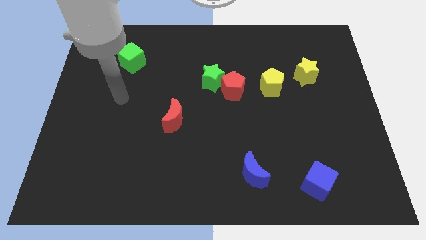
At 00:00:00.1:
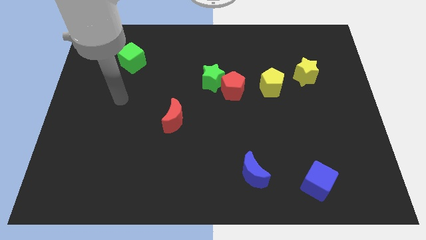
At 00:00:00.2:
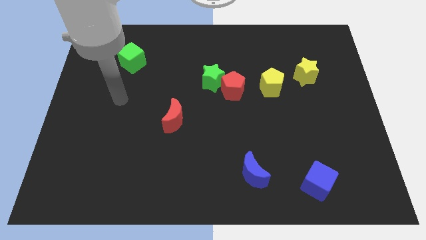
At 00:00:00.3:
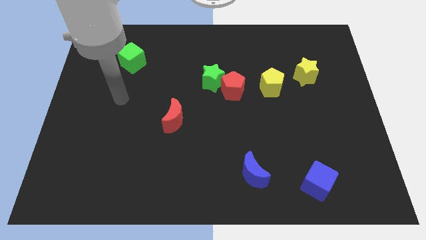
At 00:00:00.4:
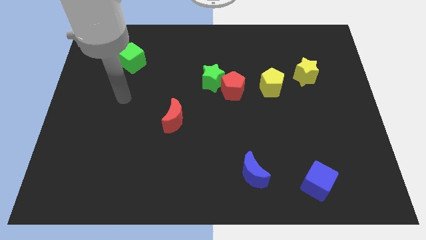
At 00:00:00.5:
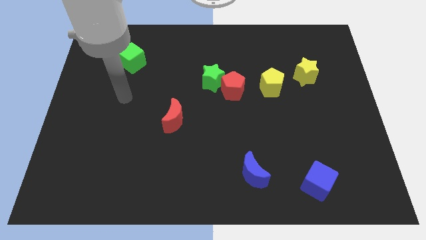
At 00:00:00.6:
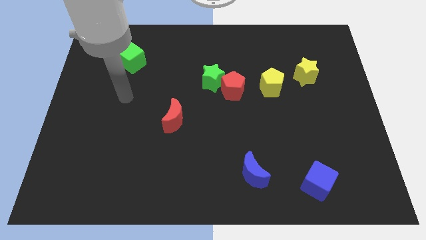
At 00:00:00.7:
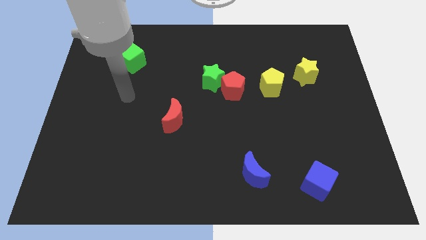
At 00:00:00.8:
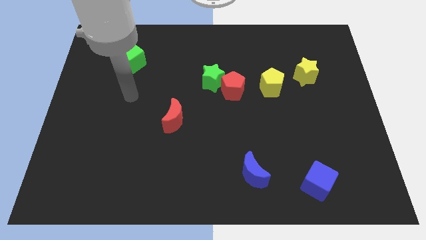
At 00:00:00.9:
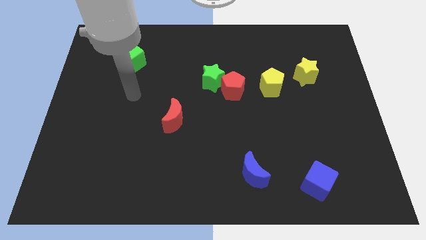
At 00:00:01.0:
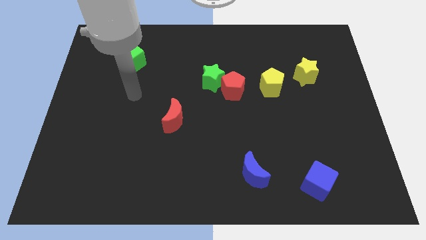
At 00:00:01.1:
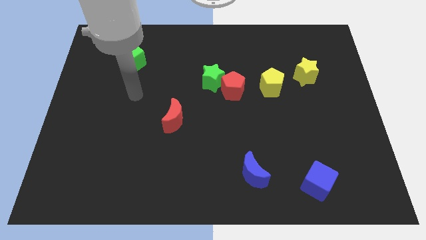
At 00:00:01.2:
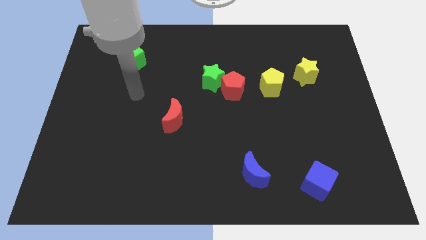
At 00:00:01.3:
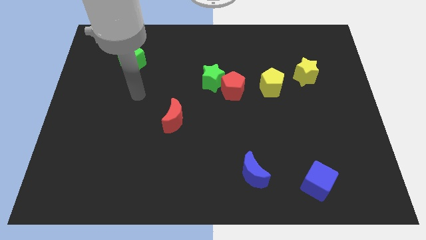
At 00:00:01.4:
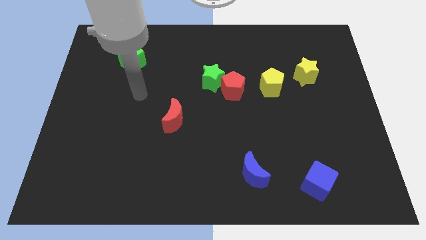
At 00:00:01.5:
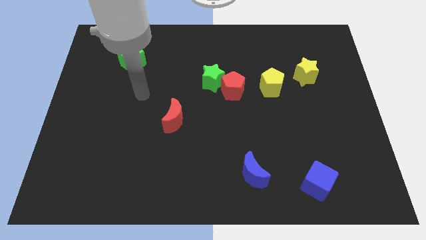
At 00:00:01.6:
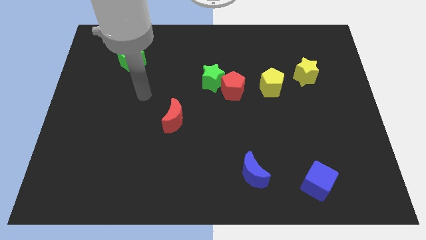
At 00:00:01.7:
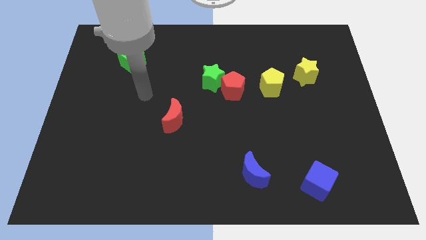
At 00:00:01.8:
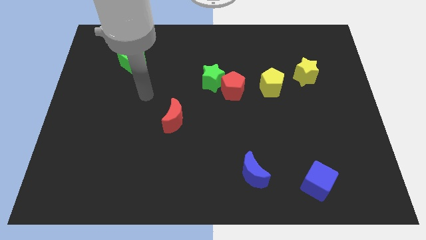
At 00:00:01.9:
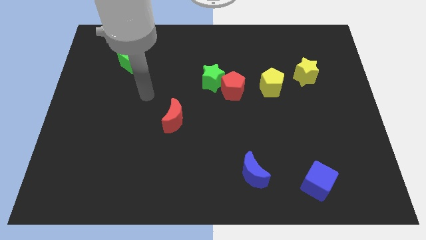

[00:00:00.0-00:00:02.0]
move your arm towards the center of the board

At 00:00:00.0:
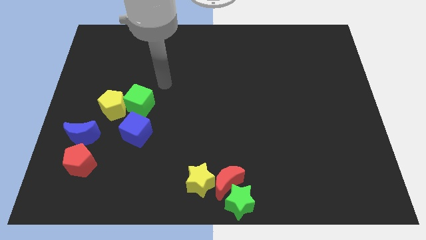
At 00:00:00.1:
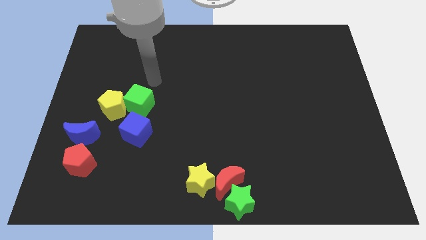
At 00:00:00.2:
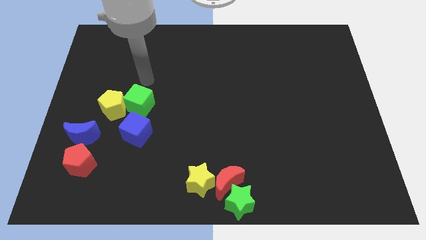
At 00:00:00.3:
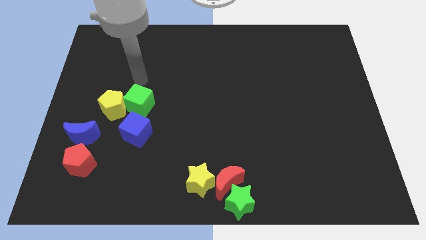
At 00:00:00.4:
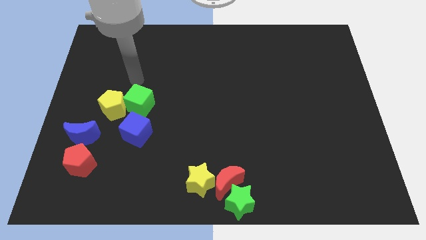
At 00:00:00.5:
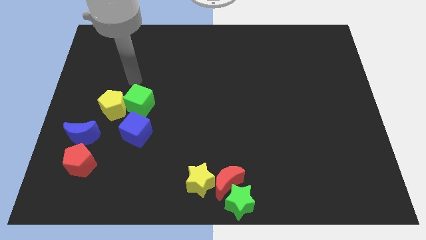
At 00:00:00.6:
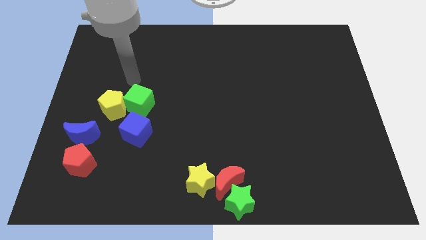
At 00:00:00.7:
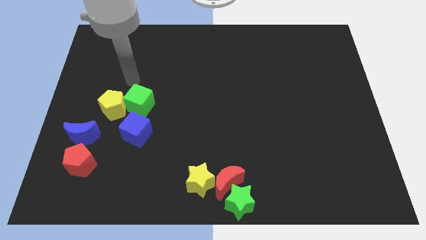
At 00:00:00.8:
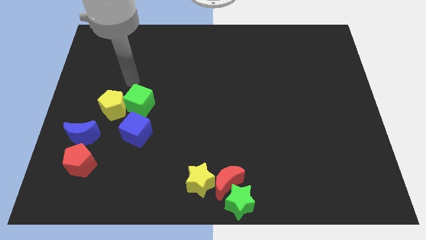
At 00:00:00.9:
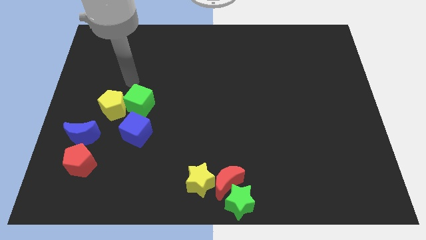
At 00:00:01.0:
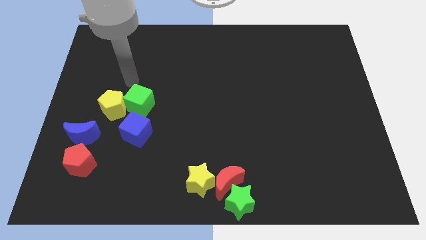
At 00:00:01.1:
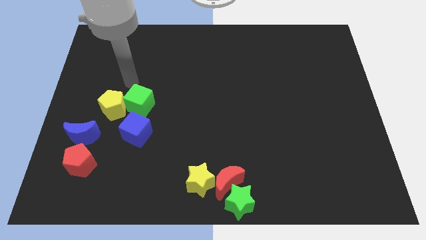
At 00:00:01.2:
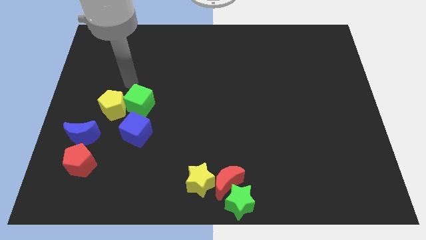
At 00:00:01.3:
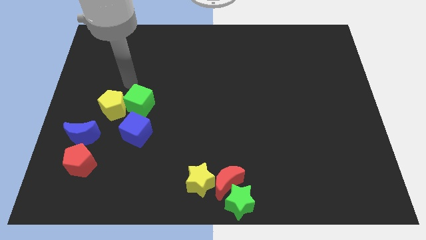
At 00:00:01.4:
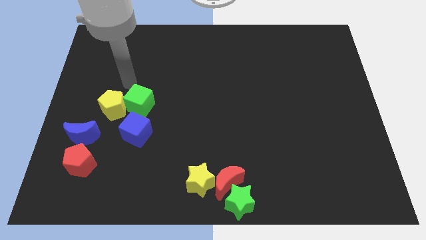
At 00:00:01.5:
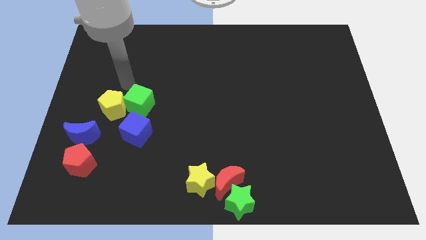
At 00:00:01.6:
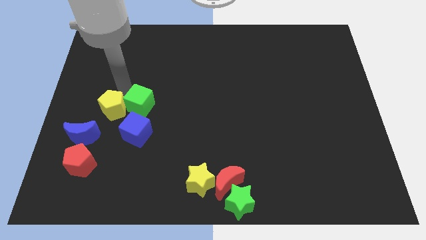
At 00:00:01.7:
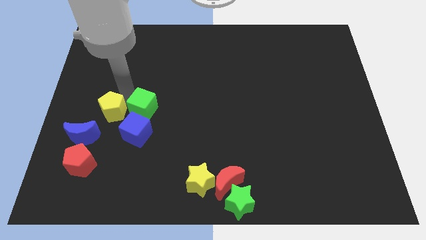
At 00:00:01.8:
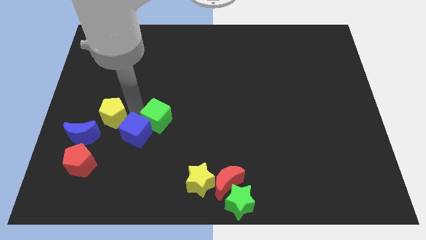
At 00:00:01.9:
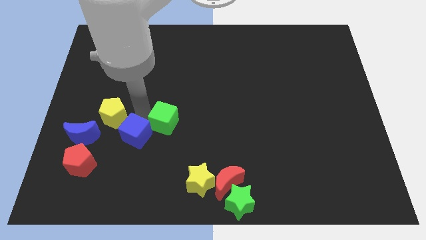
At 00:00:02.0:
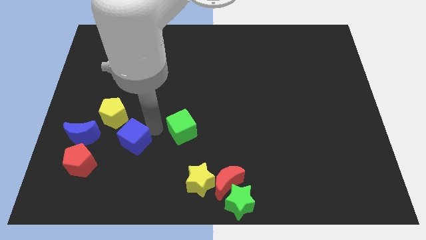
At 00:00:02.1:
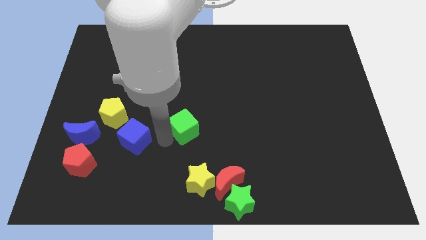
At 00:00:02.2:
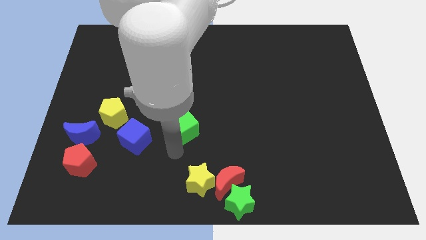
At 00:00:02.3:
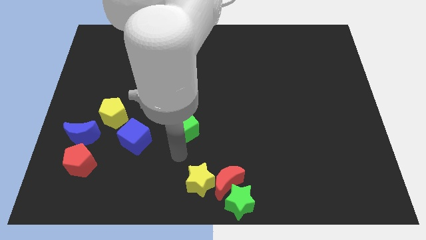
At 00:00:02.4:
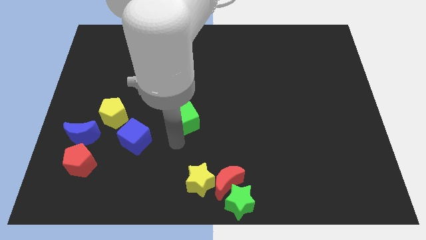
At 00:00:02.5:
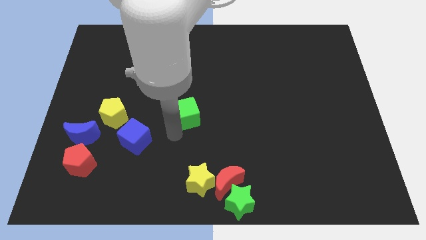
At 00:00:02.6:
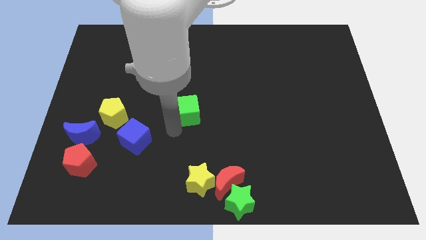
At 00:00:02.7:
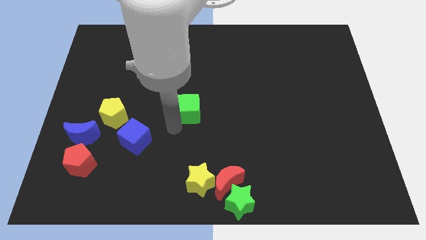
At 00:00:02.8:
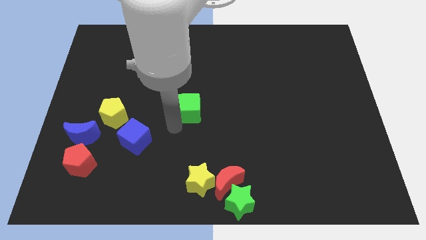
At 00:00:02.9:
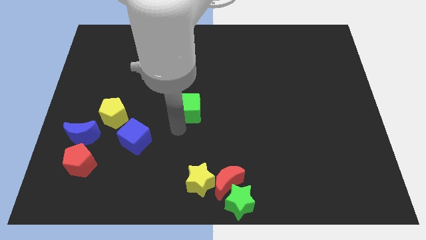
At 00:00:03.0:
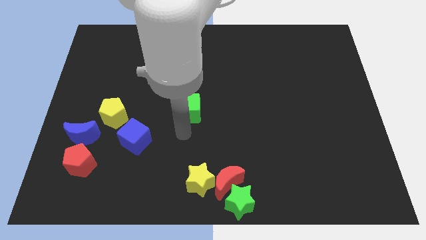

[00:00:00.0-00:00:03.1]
slide the green cube at the center

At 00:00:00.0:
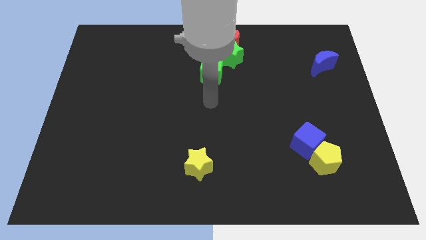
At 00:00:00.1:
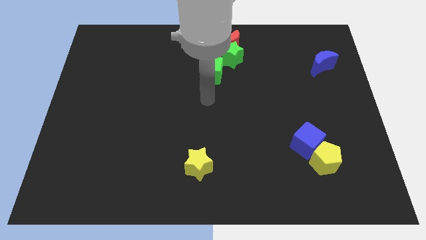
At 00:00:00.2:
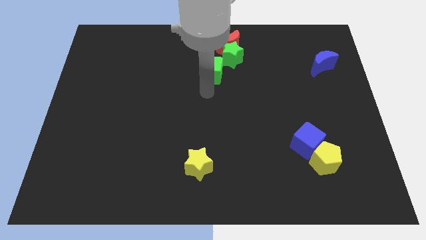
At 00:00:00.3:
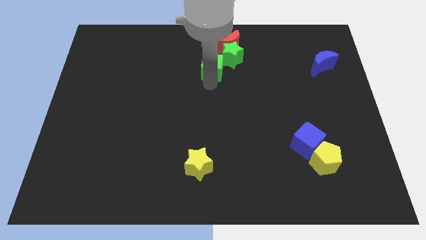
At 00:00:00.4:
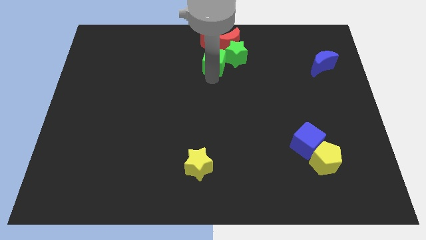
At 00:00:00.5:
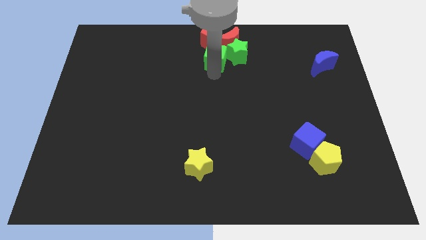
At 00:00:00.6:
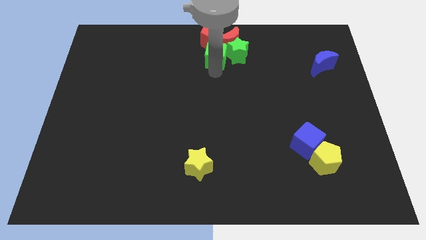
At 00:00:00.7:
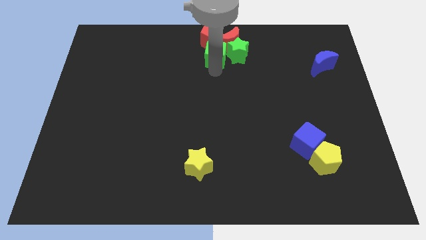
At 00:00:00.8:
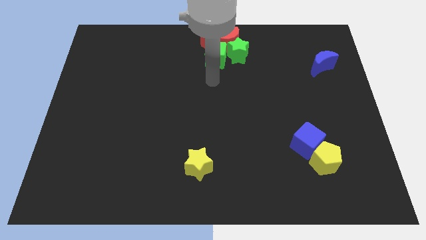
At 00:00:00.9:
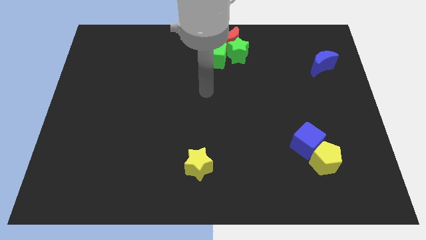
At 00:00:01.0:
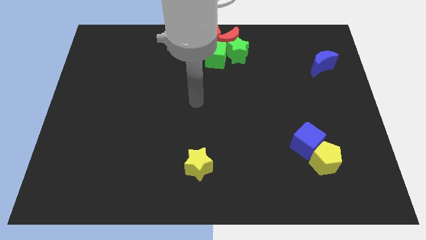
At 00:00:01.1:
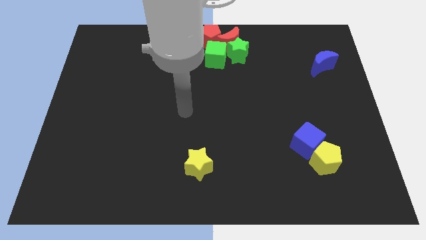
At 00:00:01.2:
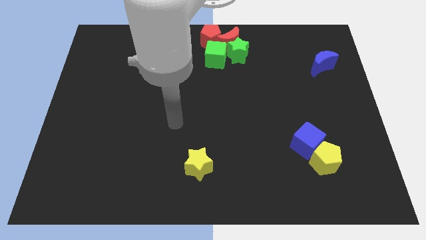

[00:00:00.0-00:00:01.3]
push the green cube to the top center

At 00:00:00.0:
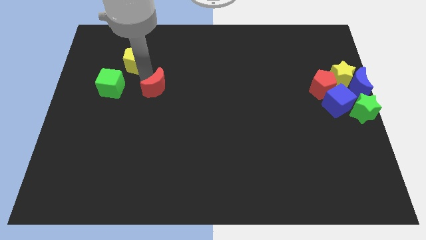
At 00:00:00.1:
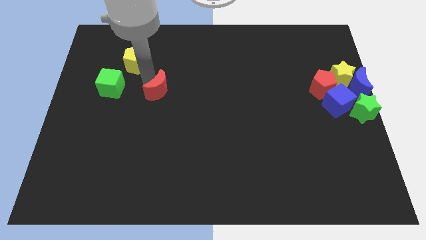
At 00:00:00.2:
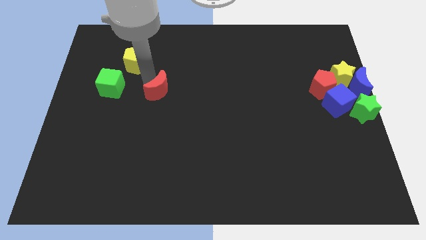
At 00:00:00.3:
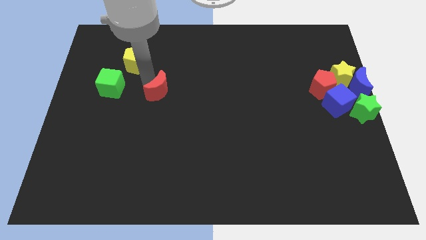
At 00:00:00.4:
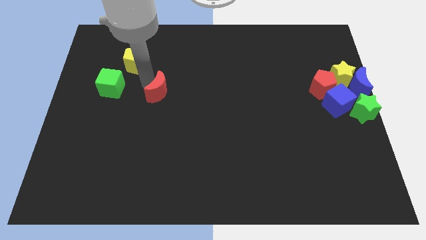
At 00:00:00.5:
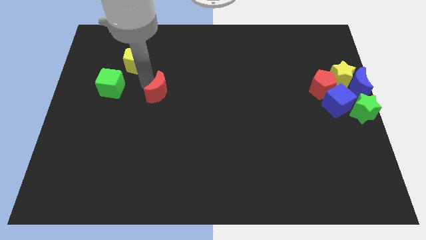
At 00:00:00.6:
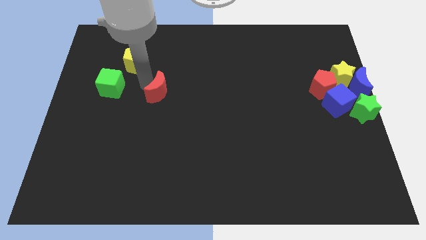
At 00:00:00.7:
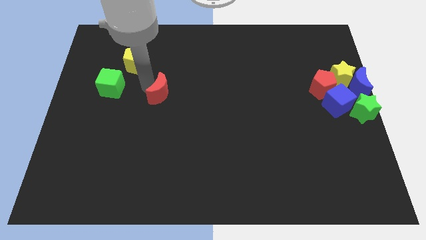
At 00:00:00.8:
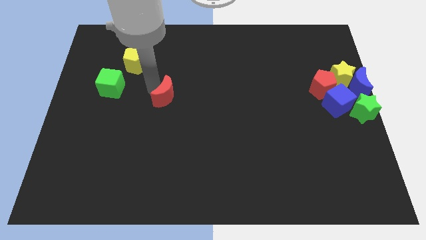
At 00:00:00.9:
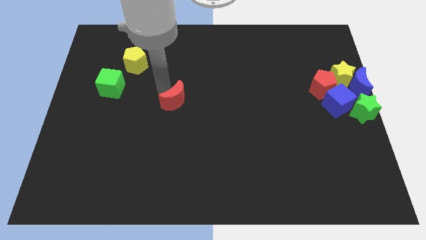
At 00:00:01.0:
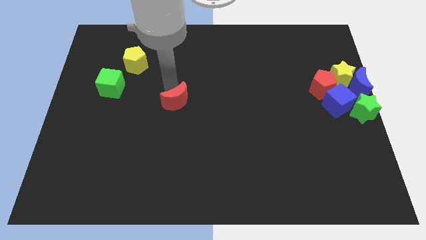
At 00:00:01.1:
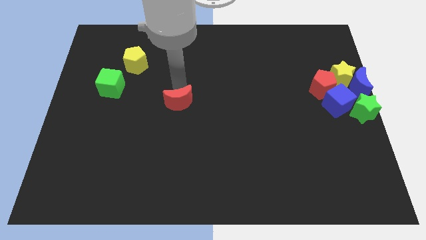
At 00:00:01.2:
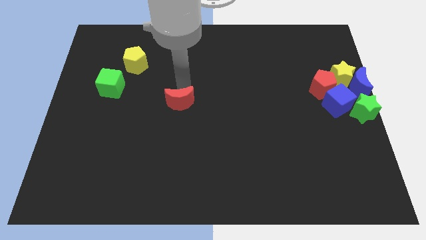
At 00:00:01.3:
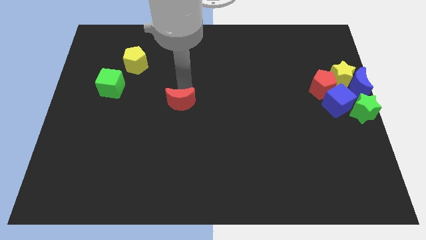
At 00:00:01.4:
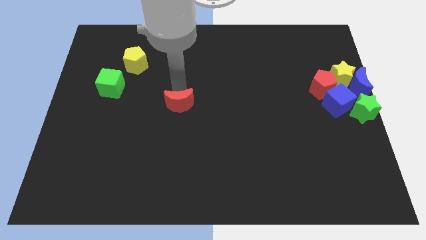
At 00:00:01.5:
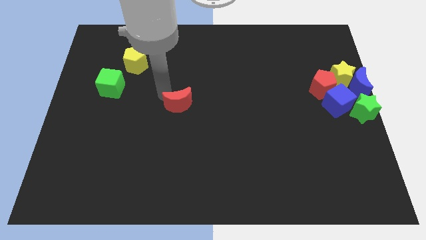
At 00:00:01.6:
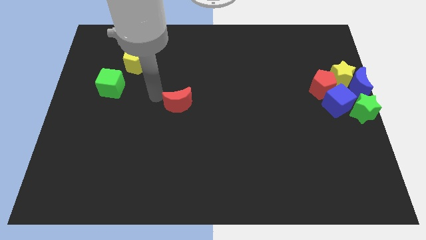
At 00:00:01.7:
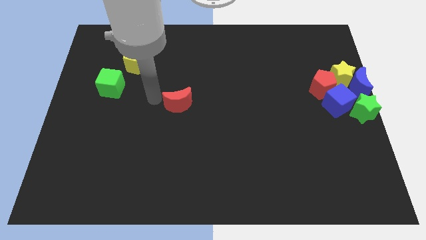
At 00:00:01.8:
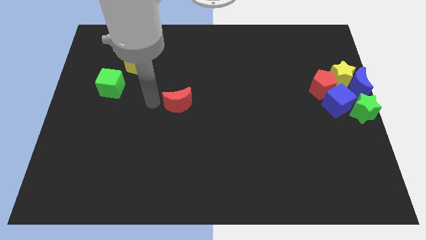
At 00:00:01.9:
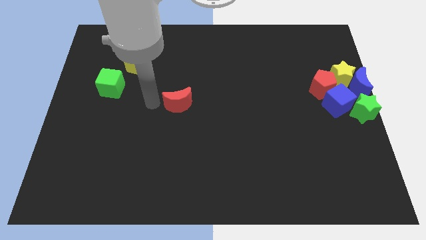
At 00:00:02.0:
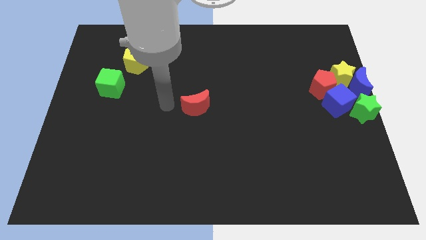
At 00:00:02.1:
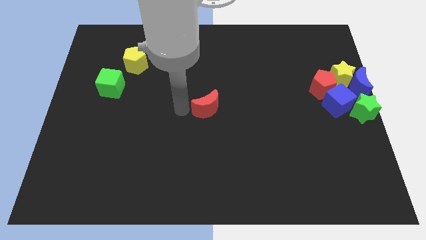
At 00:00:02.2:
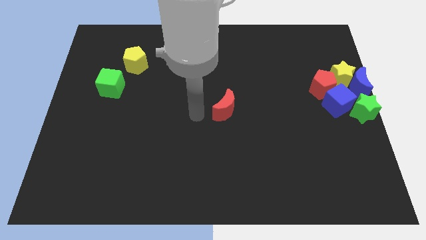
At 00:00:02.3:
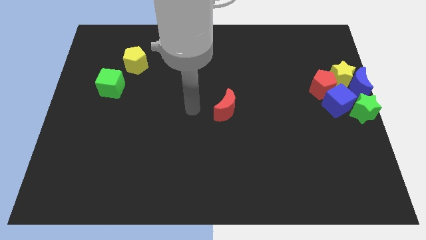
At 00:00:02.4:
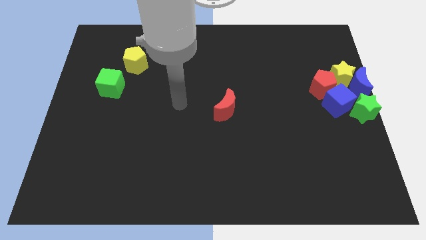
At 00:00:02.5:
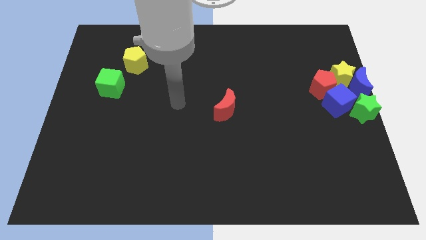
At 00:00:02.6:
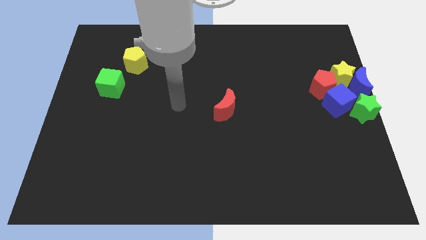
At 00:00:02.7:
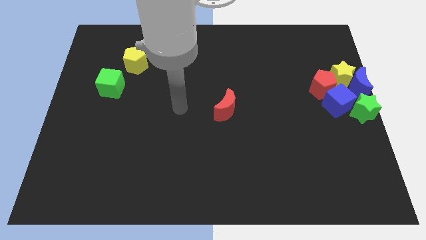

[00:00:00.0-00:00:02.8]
move the red crescent to the center of the board
